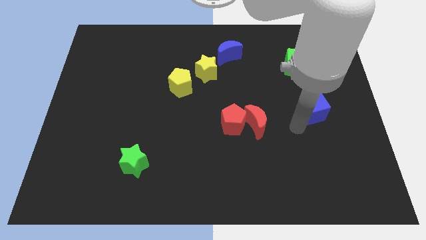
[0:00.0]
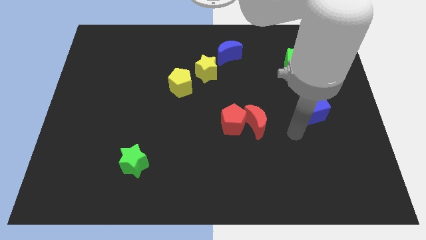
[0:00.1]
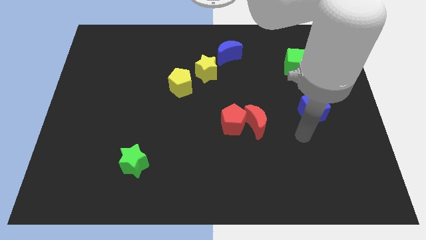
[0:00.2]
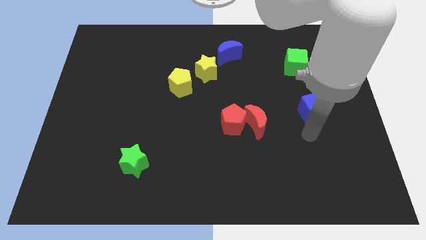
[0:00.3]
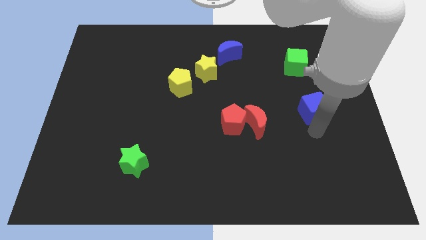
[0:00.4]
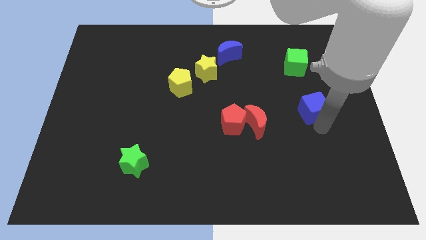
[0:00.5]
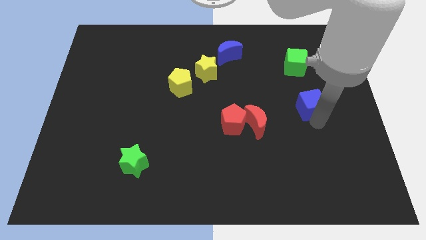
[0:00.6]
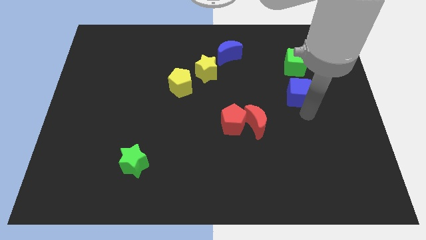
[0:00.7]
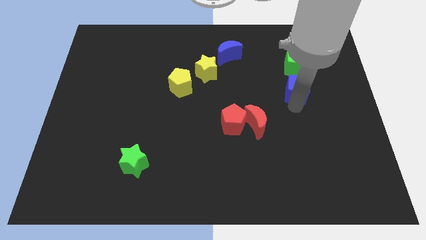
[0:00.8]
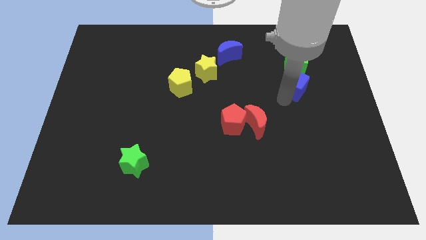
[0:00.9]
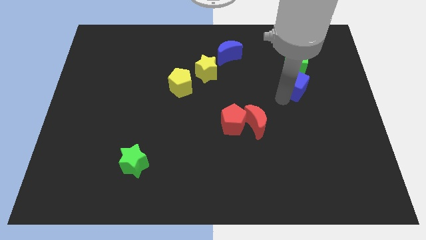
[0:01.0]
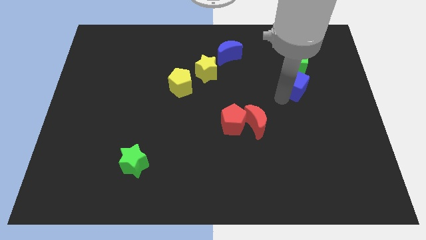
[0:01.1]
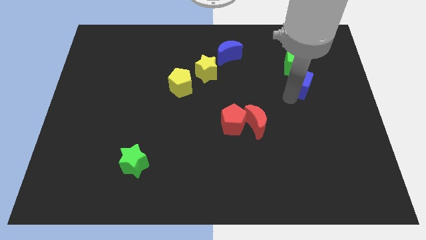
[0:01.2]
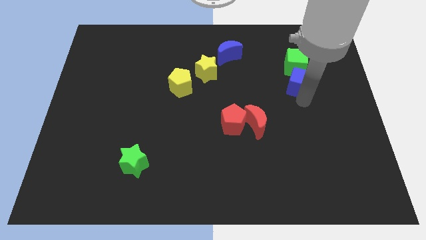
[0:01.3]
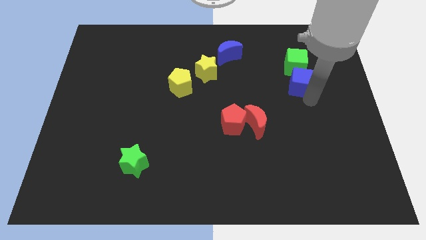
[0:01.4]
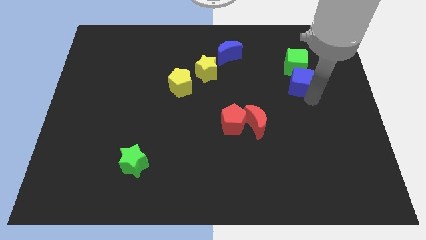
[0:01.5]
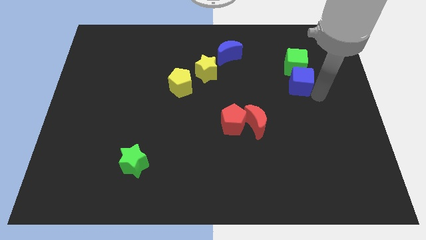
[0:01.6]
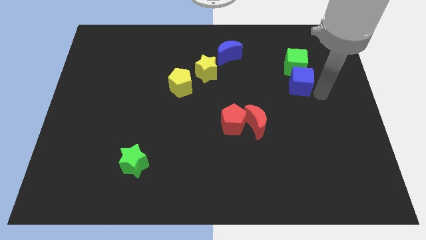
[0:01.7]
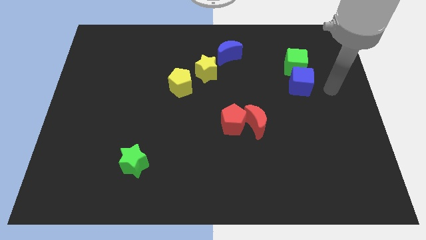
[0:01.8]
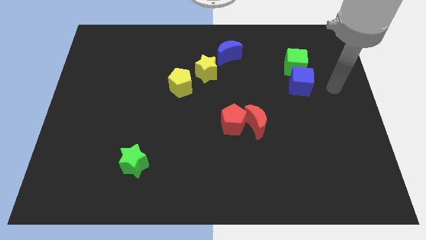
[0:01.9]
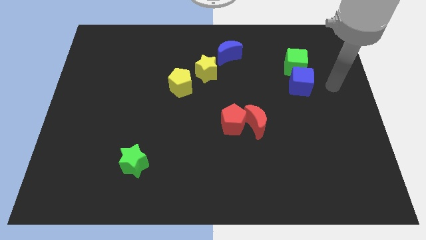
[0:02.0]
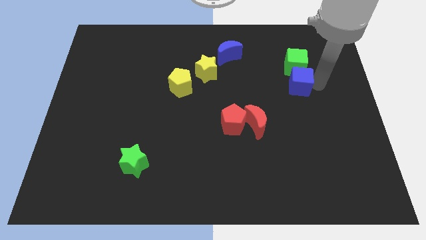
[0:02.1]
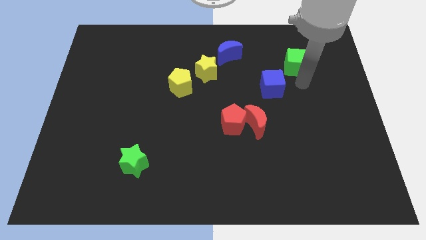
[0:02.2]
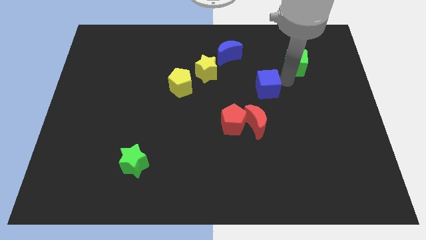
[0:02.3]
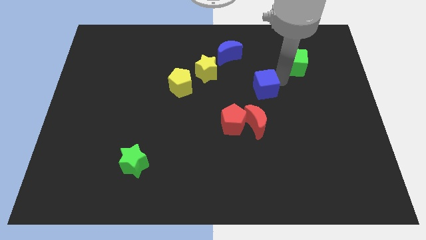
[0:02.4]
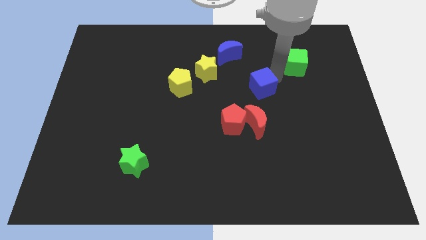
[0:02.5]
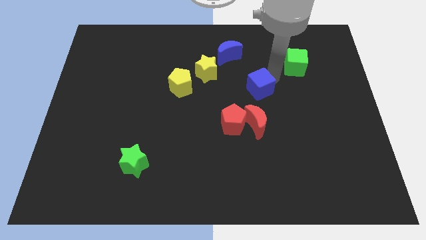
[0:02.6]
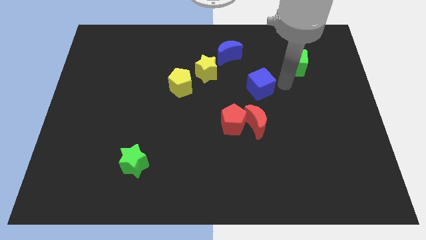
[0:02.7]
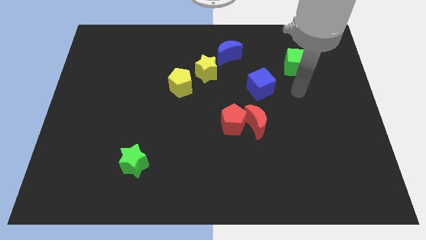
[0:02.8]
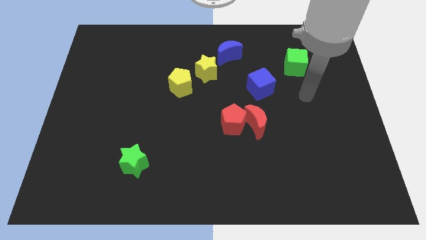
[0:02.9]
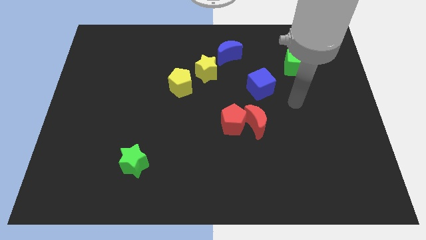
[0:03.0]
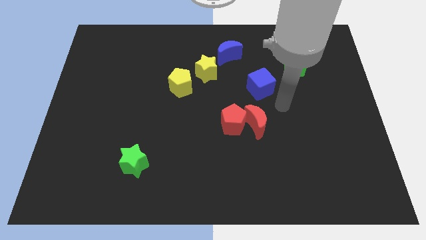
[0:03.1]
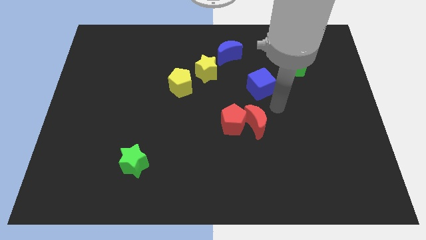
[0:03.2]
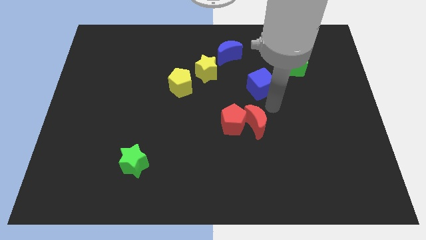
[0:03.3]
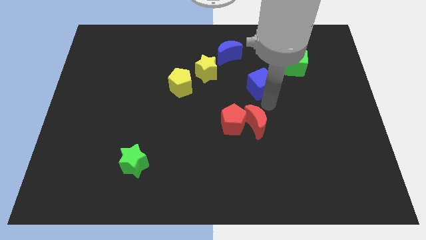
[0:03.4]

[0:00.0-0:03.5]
place blue cube vertical to red moon

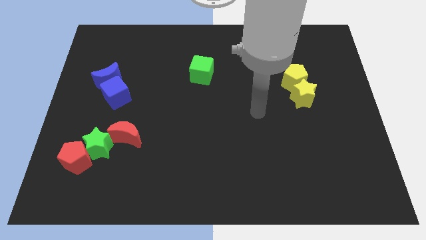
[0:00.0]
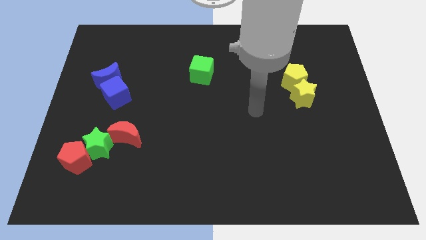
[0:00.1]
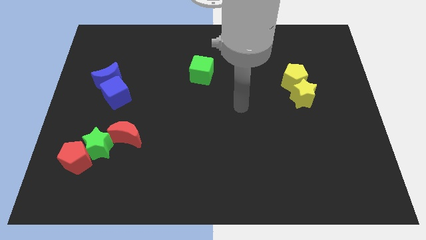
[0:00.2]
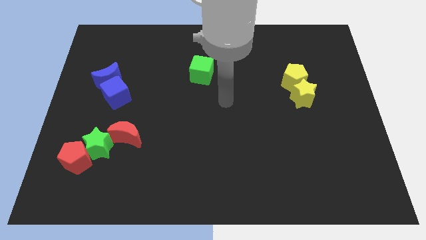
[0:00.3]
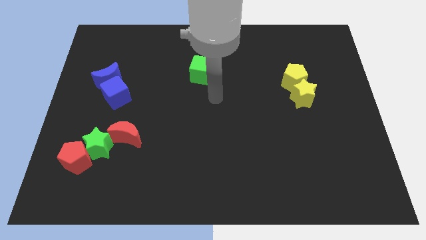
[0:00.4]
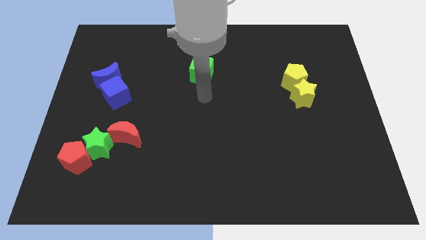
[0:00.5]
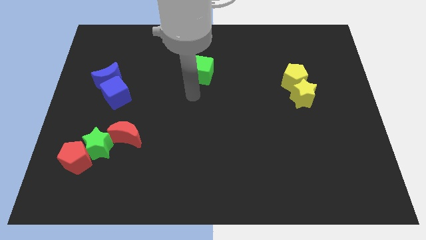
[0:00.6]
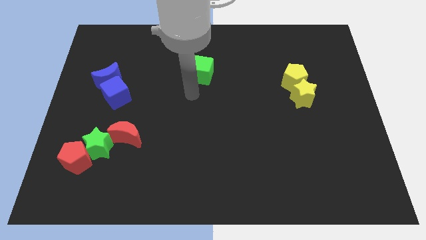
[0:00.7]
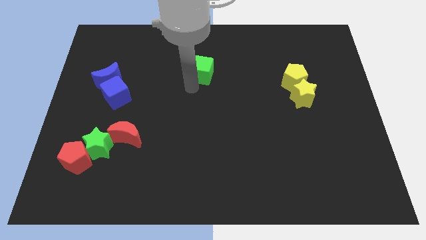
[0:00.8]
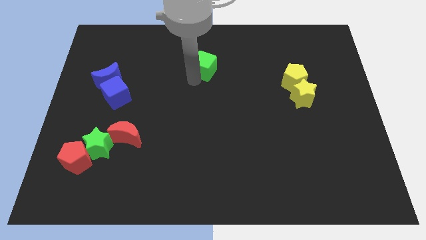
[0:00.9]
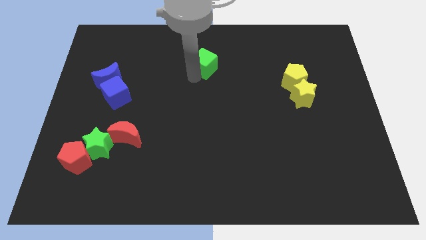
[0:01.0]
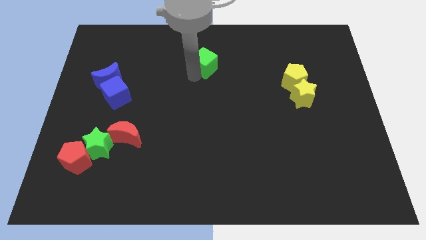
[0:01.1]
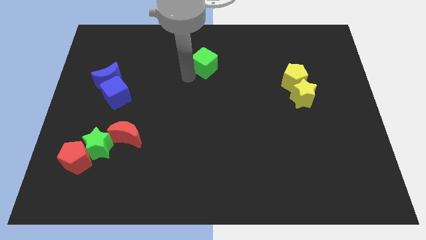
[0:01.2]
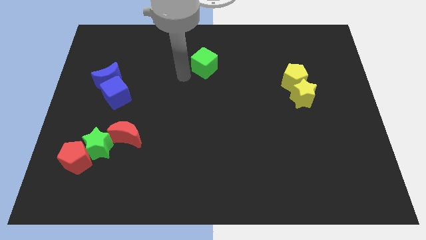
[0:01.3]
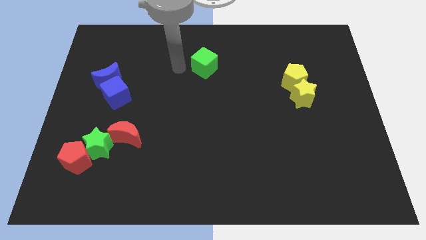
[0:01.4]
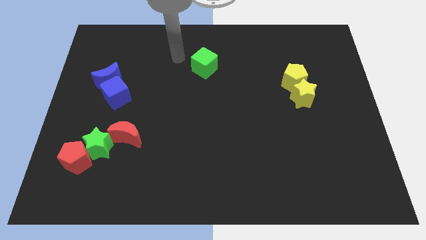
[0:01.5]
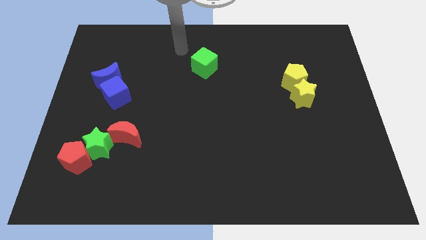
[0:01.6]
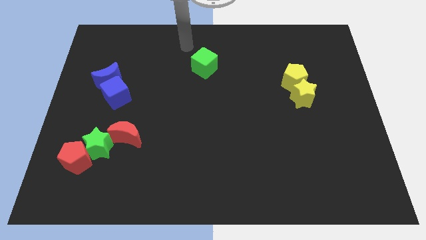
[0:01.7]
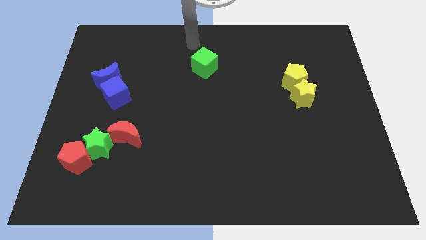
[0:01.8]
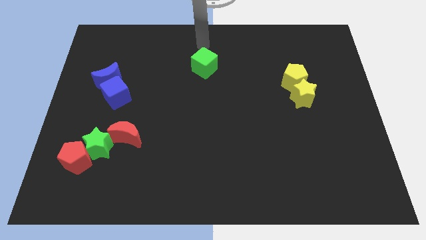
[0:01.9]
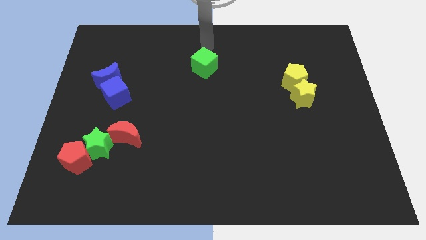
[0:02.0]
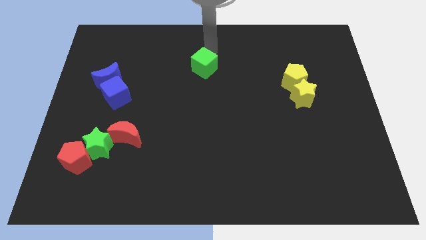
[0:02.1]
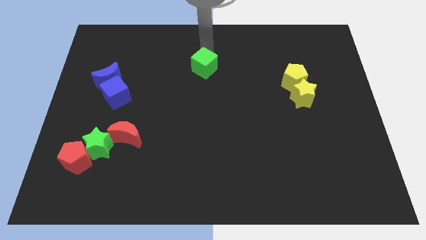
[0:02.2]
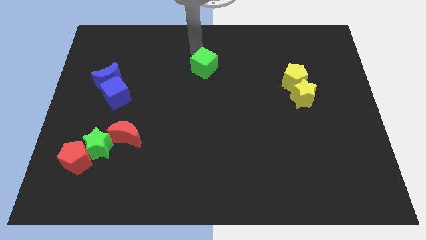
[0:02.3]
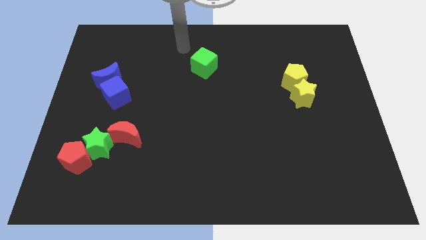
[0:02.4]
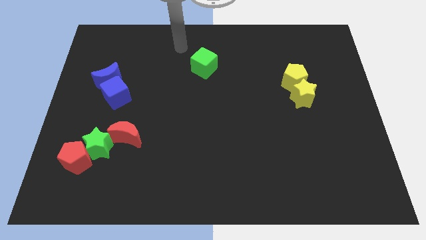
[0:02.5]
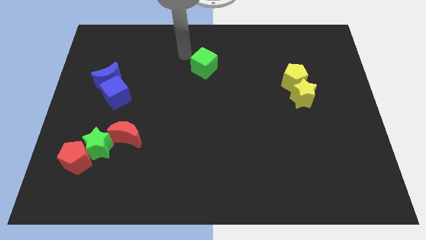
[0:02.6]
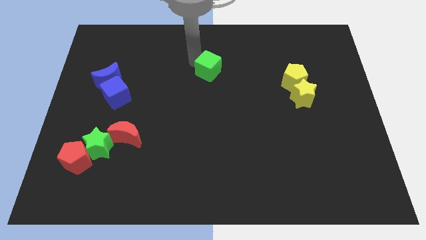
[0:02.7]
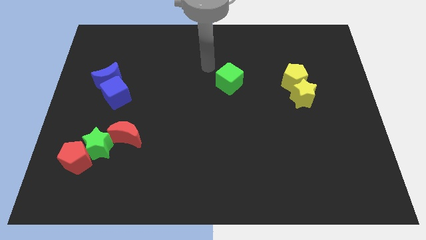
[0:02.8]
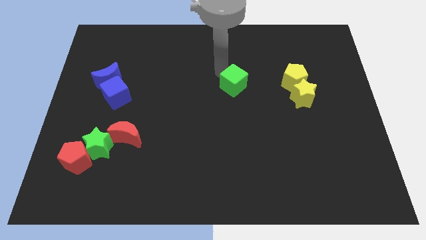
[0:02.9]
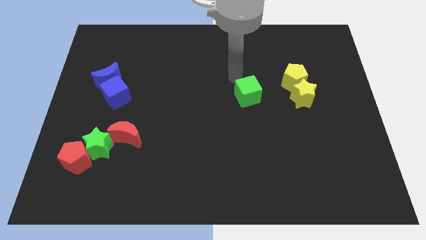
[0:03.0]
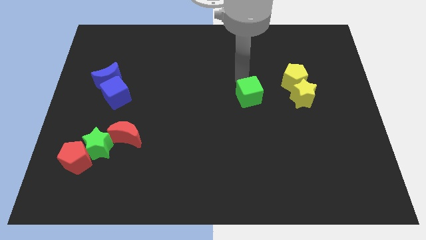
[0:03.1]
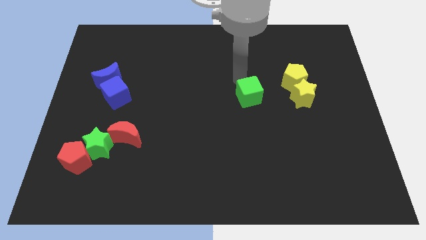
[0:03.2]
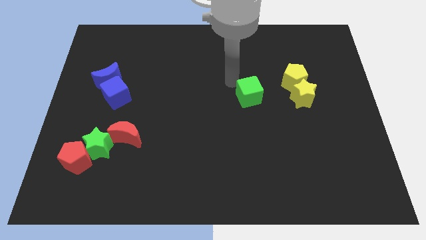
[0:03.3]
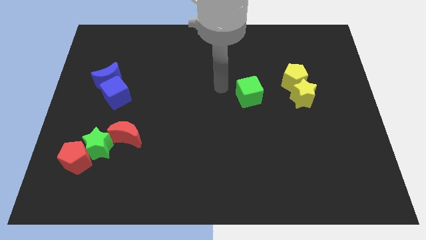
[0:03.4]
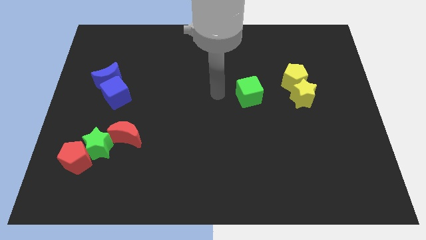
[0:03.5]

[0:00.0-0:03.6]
move the green cube to the left of yellow blocks

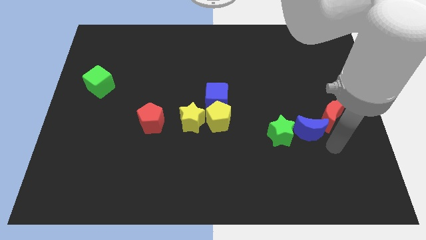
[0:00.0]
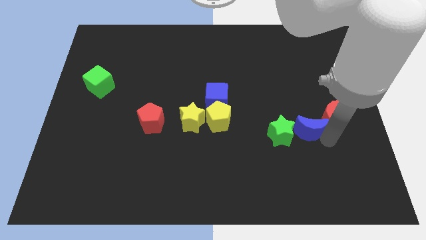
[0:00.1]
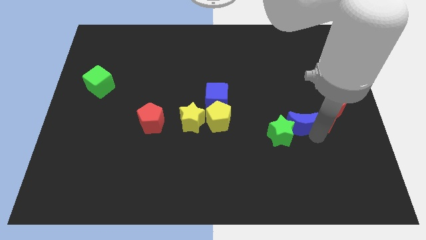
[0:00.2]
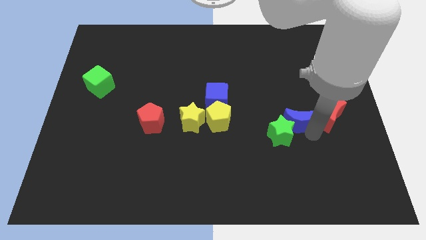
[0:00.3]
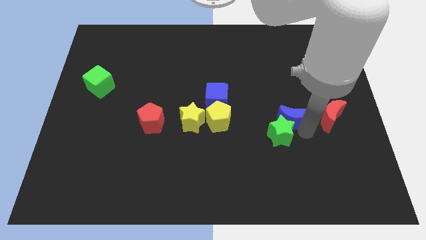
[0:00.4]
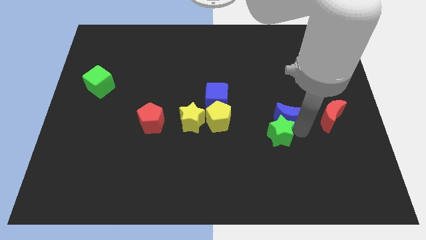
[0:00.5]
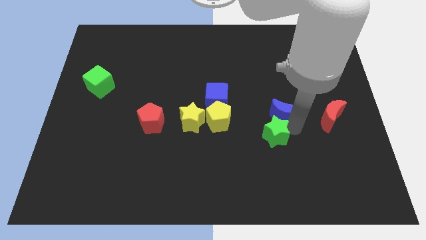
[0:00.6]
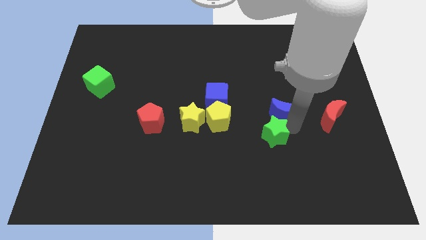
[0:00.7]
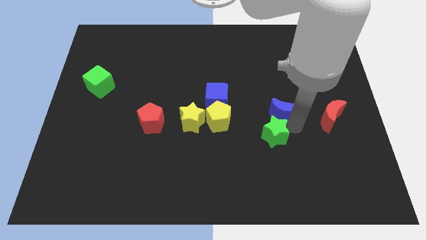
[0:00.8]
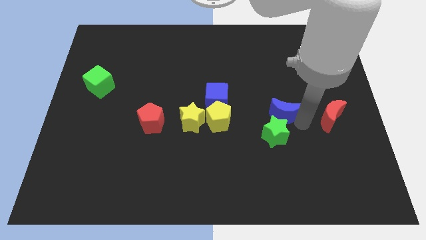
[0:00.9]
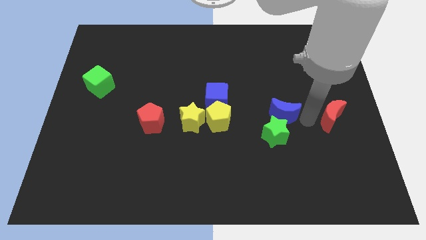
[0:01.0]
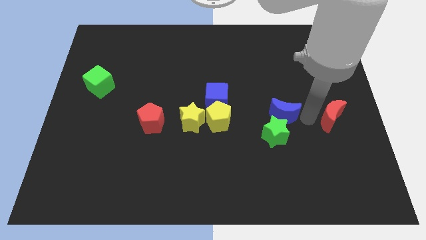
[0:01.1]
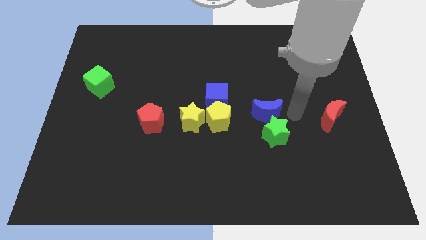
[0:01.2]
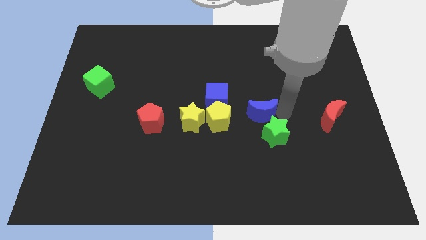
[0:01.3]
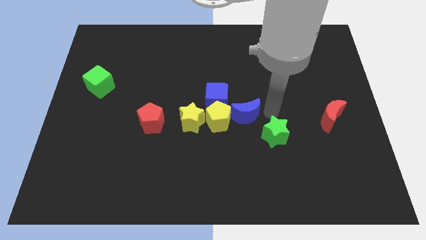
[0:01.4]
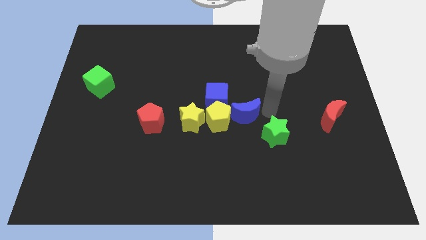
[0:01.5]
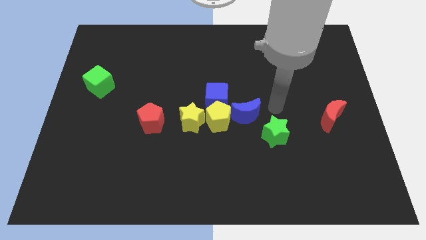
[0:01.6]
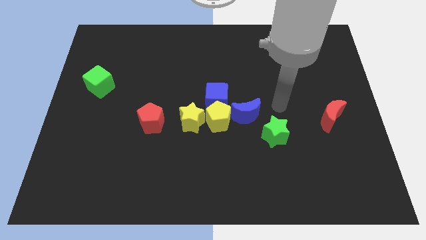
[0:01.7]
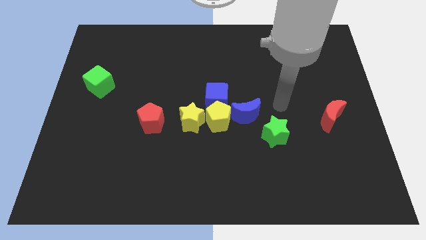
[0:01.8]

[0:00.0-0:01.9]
push the blue moon close to the yellow pentagon
